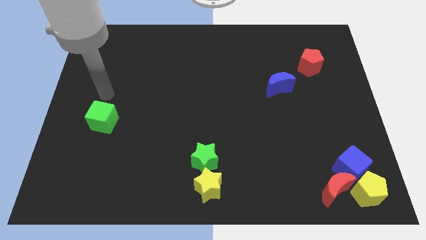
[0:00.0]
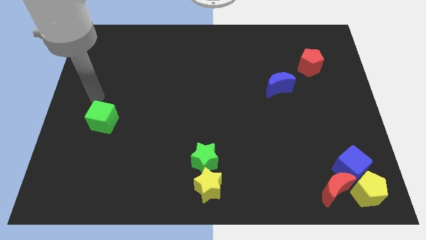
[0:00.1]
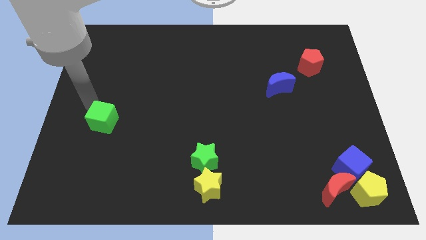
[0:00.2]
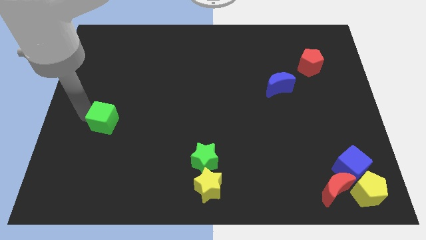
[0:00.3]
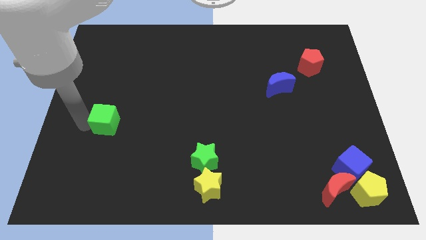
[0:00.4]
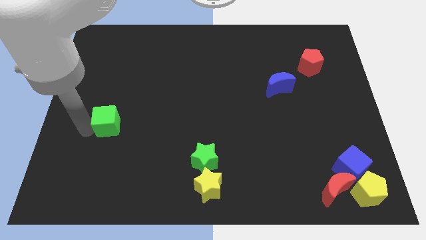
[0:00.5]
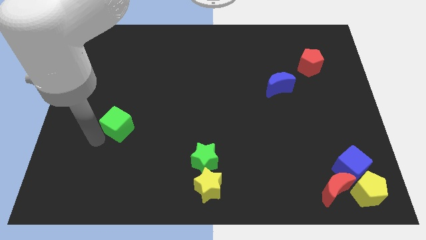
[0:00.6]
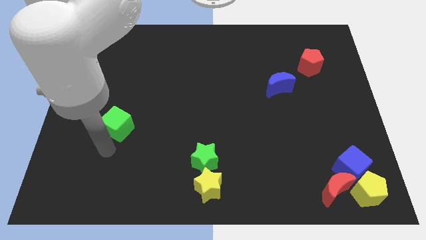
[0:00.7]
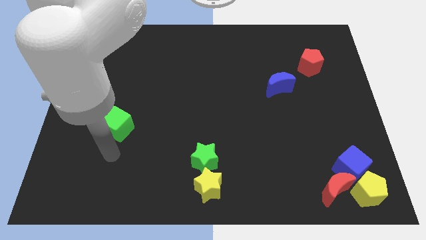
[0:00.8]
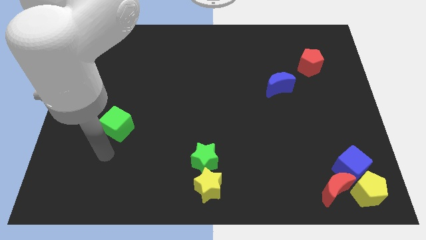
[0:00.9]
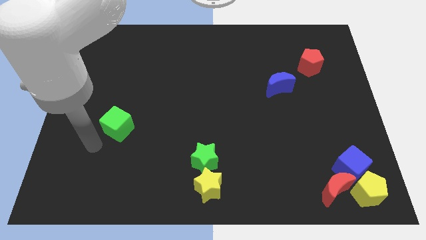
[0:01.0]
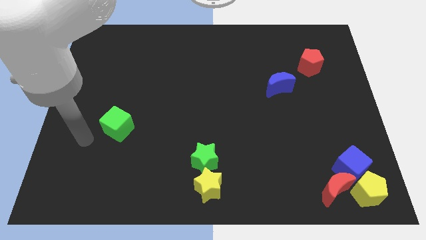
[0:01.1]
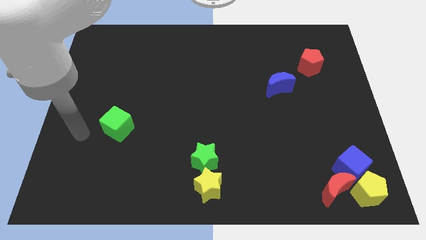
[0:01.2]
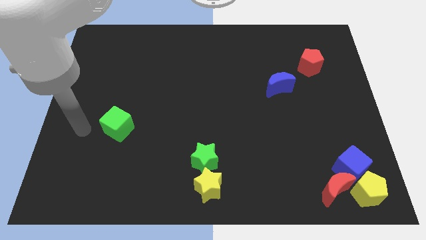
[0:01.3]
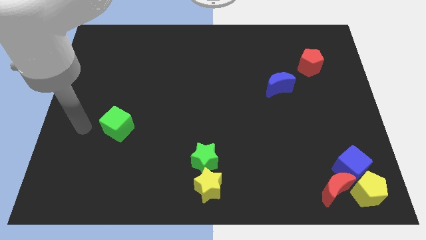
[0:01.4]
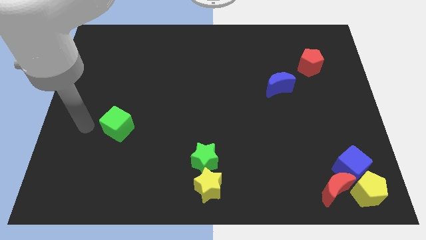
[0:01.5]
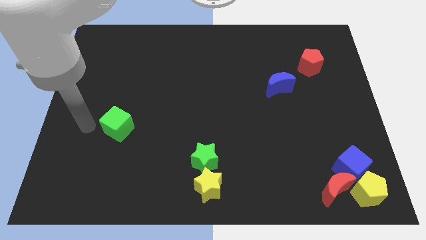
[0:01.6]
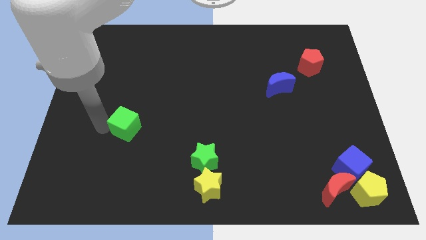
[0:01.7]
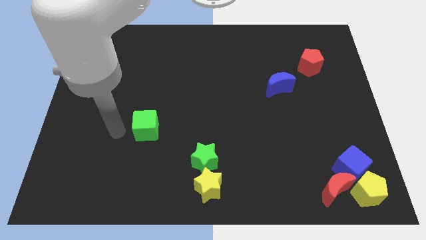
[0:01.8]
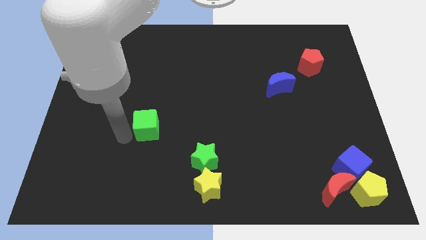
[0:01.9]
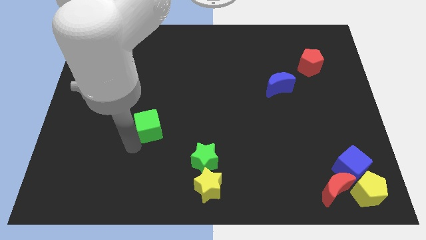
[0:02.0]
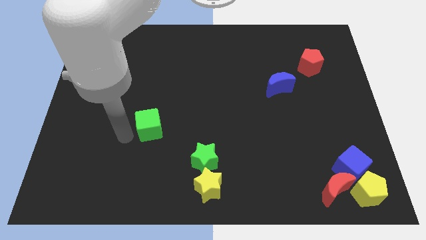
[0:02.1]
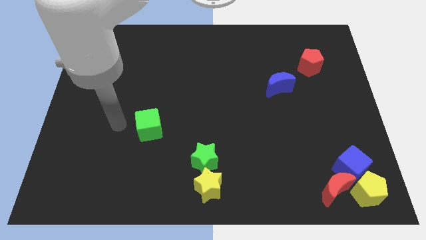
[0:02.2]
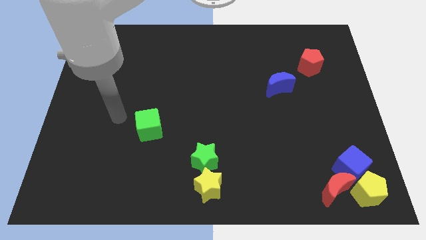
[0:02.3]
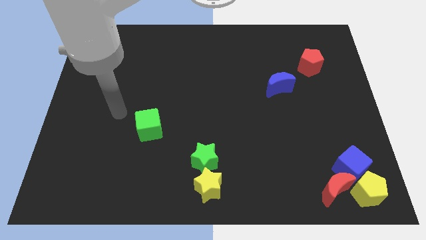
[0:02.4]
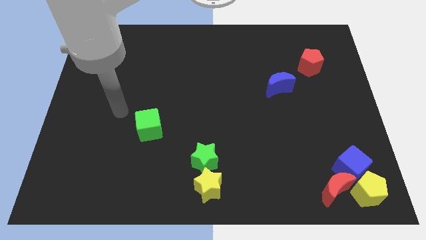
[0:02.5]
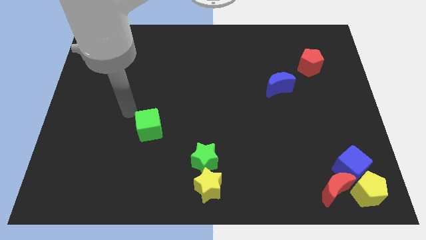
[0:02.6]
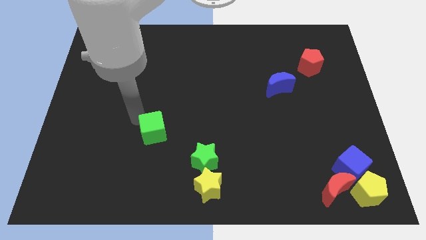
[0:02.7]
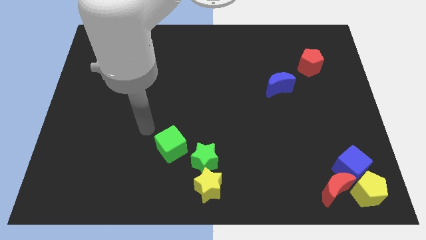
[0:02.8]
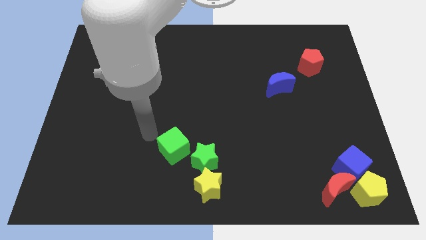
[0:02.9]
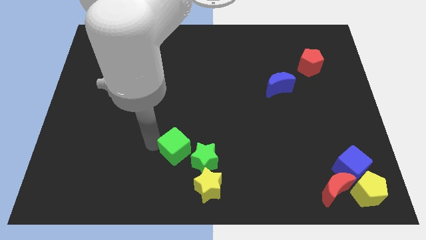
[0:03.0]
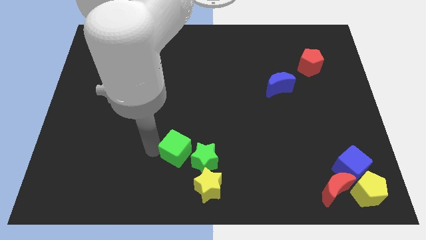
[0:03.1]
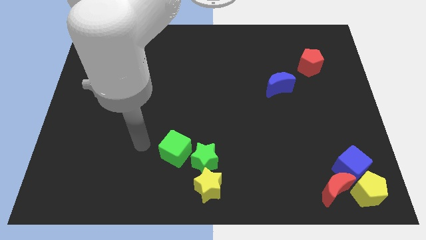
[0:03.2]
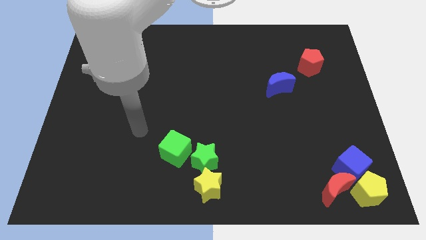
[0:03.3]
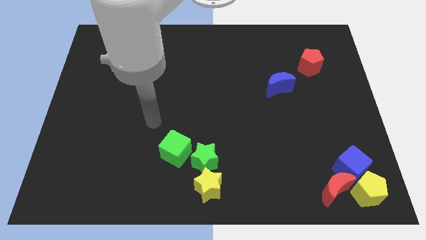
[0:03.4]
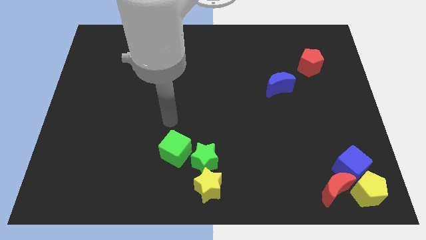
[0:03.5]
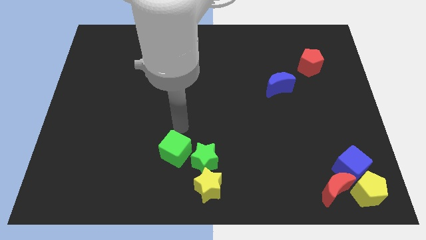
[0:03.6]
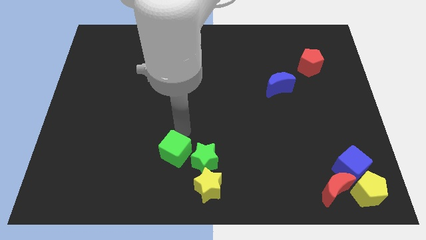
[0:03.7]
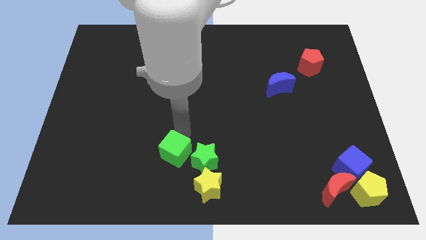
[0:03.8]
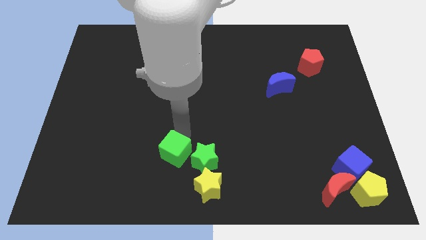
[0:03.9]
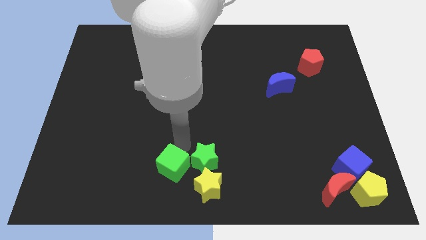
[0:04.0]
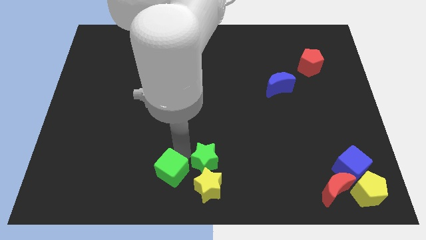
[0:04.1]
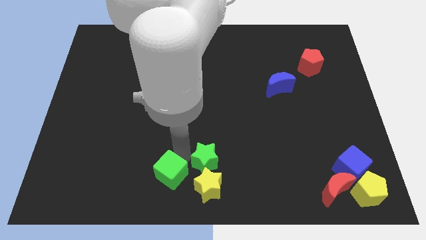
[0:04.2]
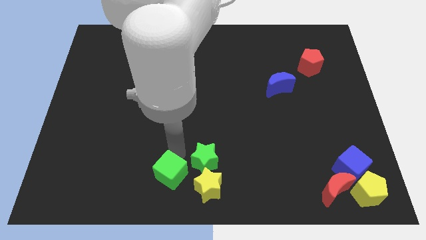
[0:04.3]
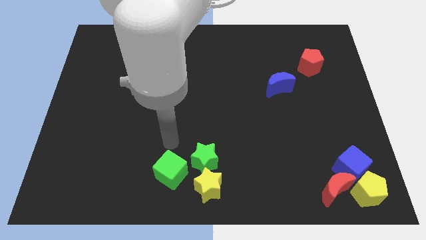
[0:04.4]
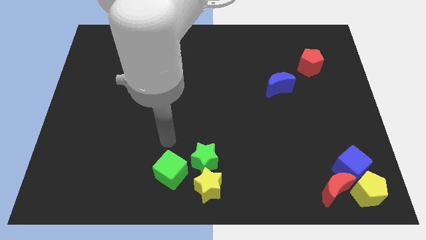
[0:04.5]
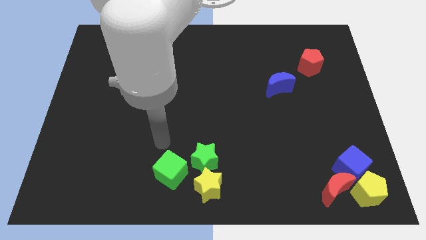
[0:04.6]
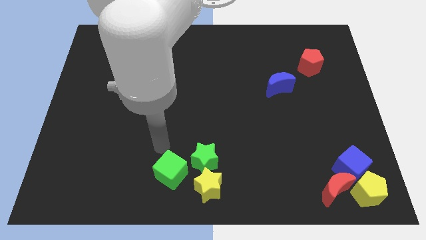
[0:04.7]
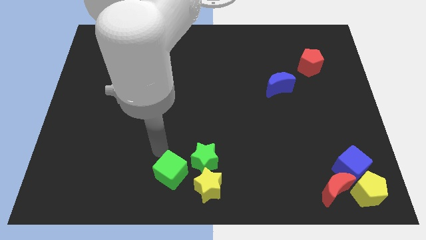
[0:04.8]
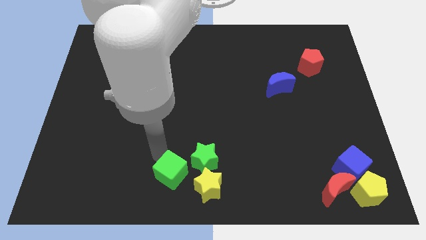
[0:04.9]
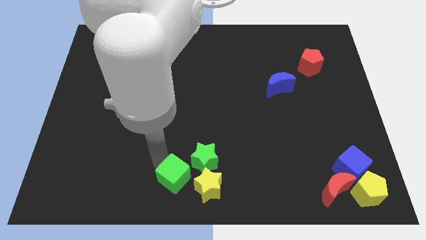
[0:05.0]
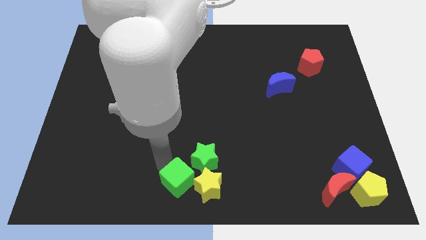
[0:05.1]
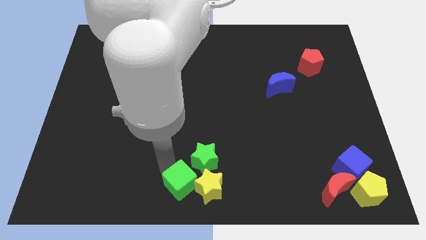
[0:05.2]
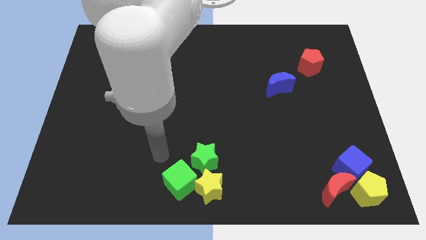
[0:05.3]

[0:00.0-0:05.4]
move the green cube into the yellow star

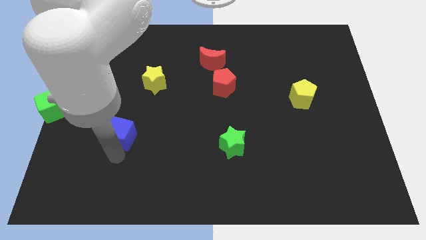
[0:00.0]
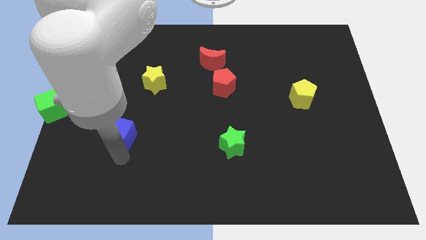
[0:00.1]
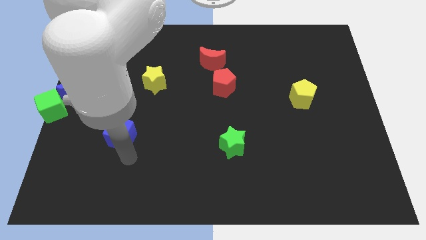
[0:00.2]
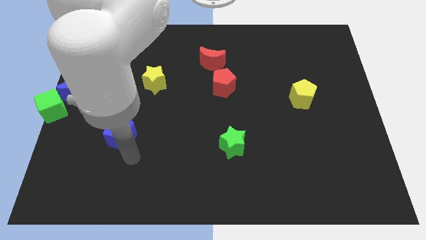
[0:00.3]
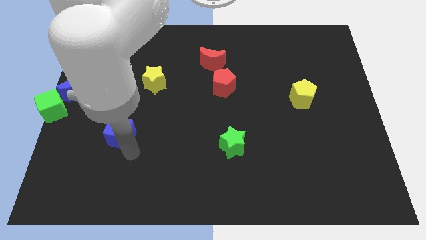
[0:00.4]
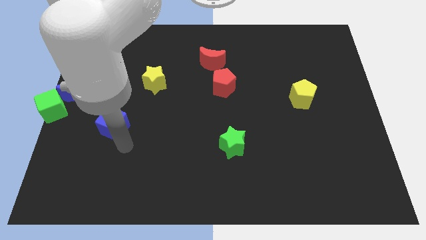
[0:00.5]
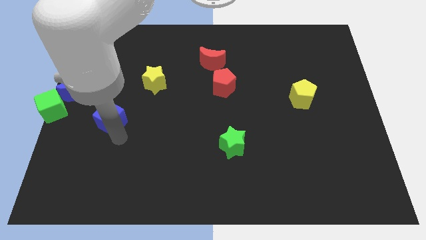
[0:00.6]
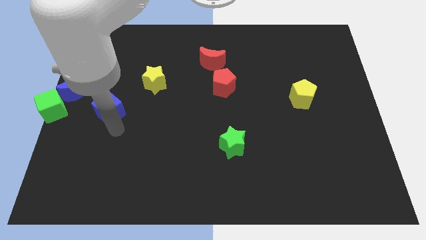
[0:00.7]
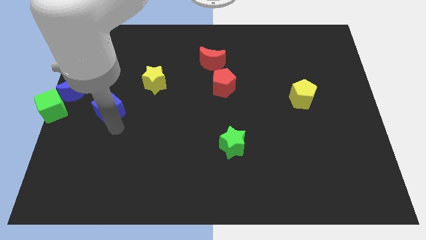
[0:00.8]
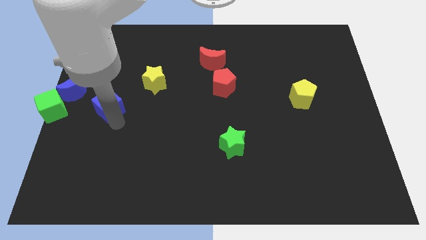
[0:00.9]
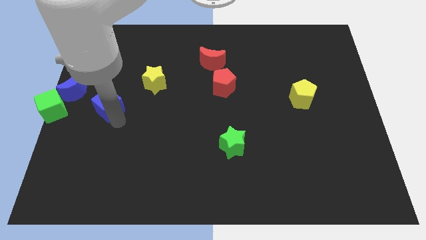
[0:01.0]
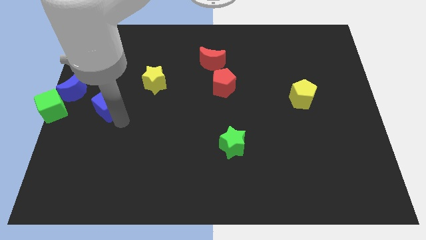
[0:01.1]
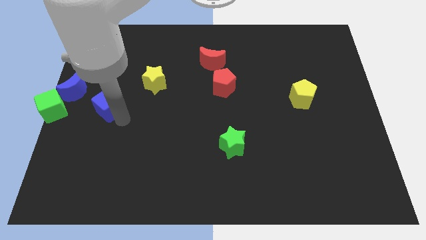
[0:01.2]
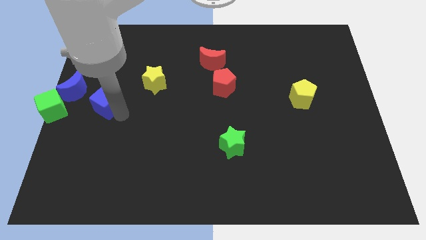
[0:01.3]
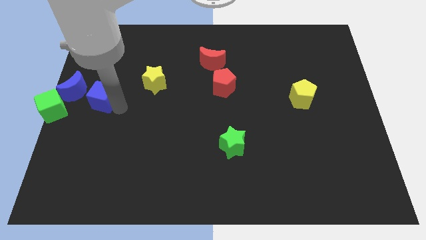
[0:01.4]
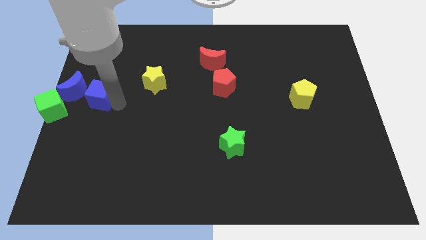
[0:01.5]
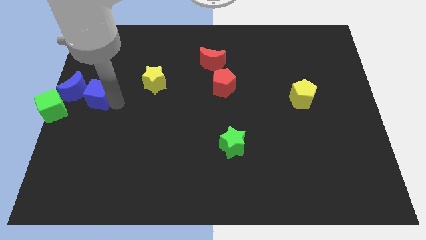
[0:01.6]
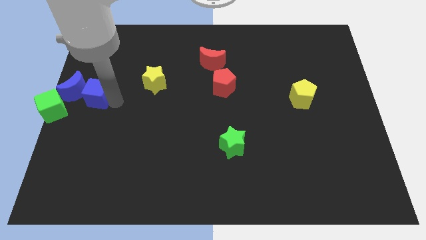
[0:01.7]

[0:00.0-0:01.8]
move the blue cube to the right of the blue crescent

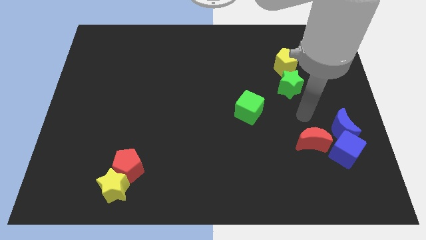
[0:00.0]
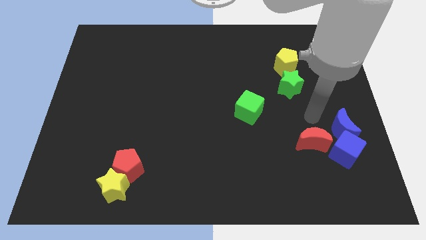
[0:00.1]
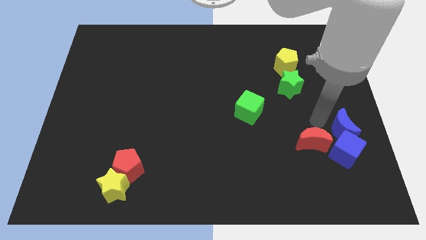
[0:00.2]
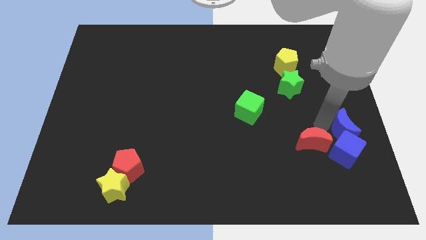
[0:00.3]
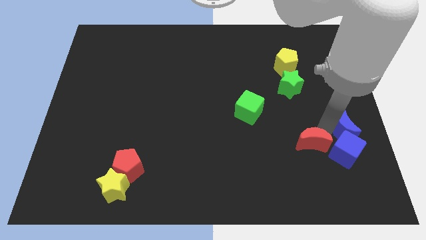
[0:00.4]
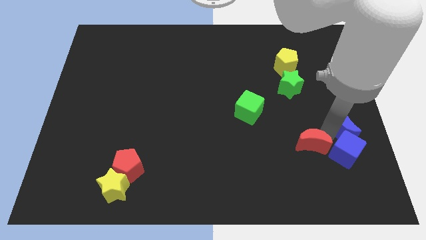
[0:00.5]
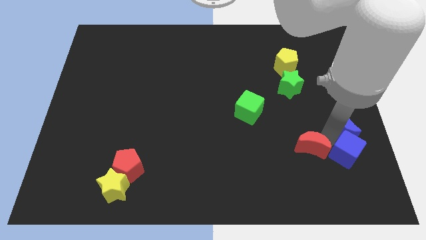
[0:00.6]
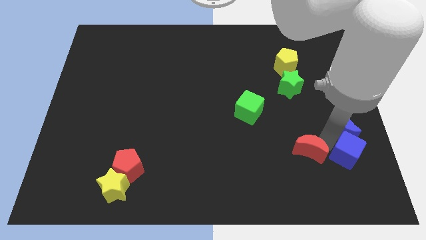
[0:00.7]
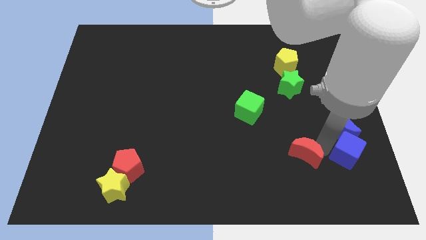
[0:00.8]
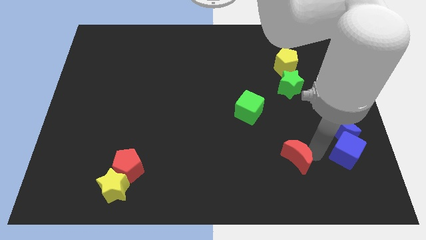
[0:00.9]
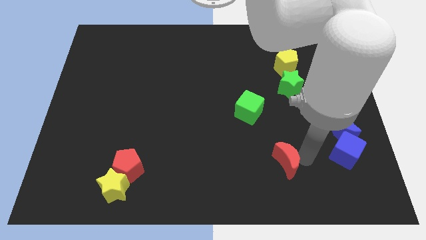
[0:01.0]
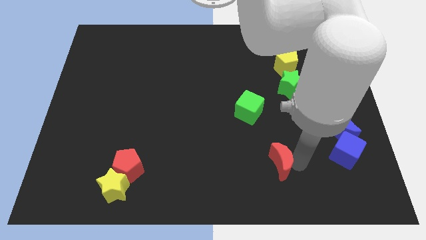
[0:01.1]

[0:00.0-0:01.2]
separate the red crescent from the blue cube

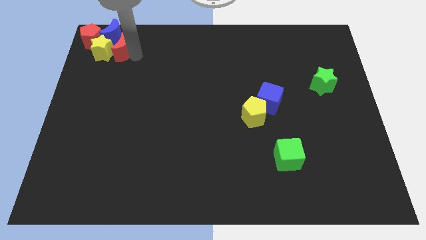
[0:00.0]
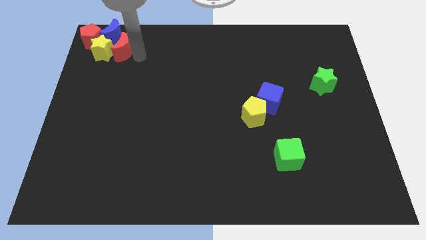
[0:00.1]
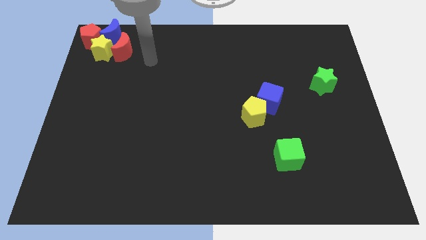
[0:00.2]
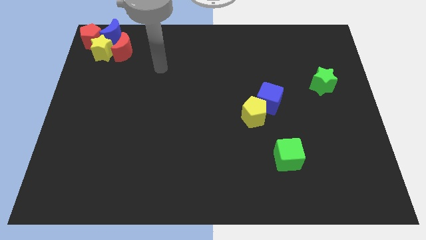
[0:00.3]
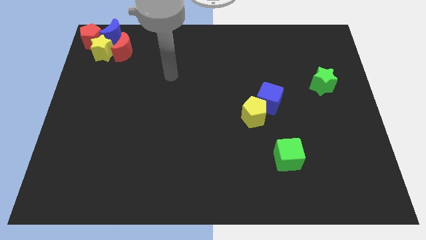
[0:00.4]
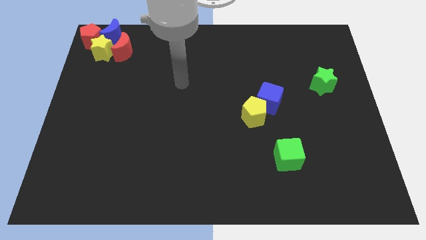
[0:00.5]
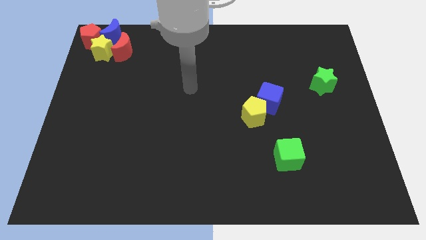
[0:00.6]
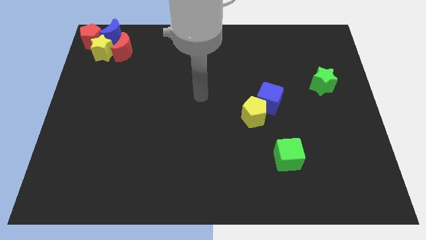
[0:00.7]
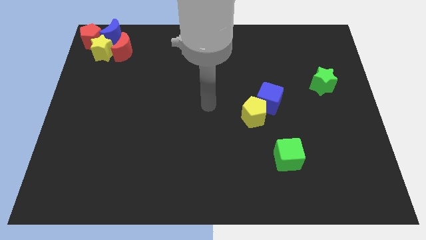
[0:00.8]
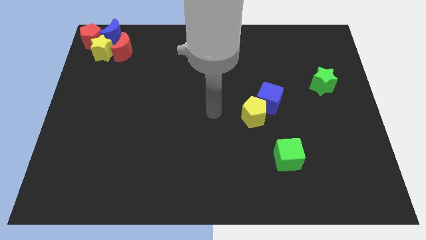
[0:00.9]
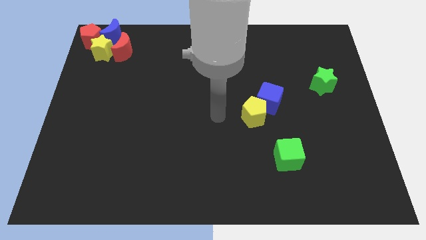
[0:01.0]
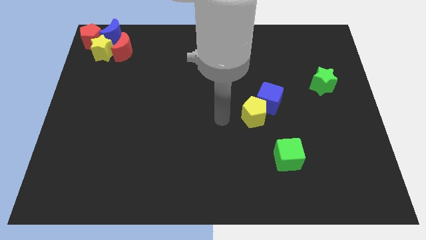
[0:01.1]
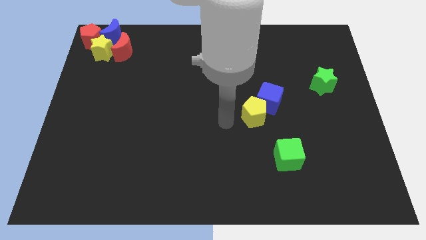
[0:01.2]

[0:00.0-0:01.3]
point your arm at the center of the board
